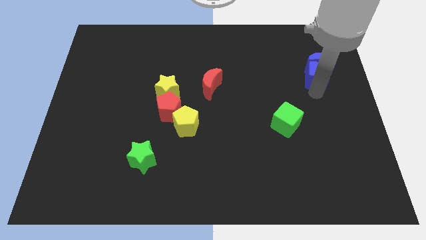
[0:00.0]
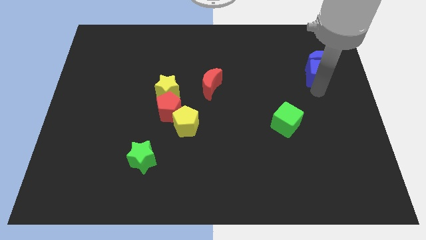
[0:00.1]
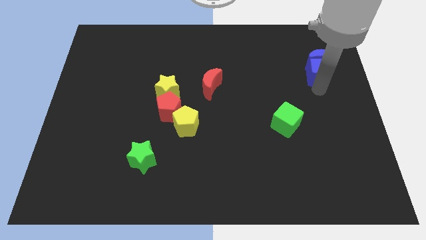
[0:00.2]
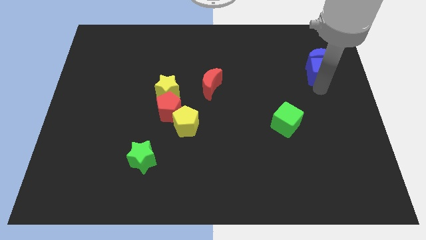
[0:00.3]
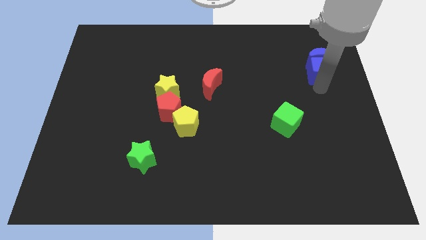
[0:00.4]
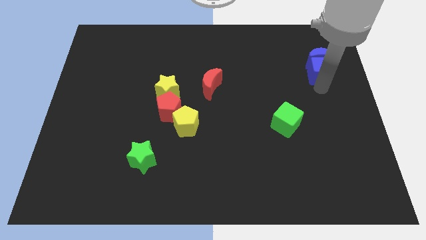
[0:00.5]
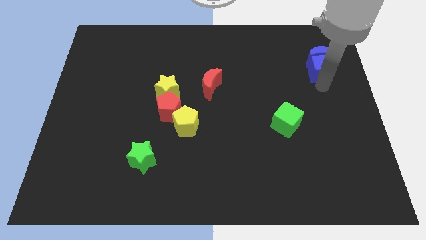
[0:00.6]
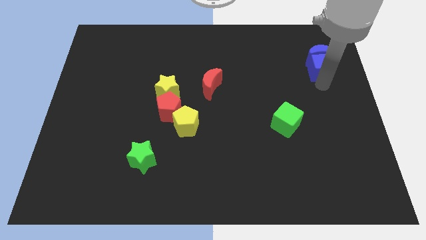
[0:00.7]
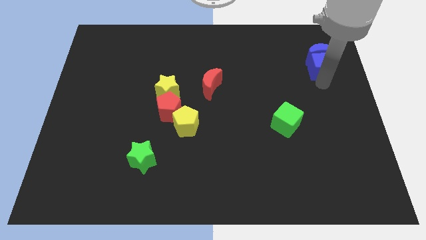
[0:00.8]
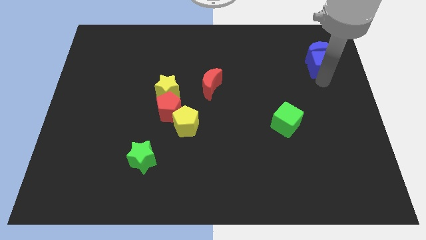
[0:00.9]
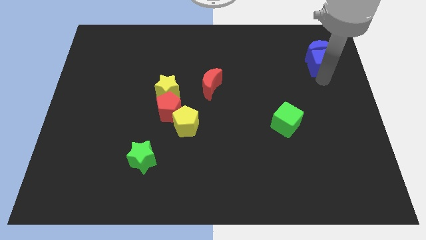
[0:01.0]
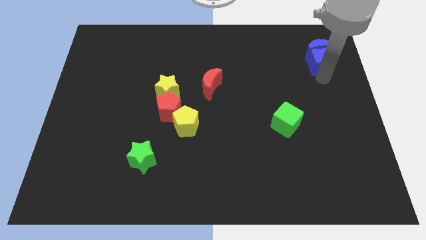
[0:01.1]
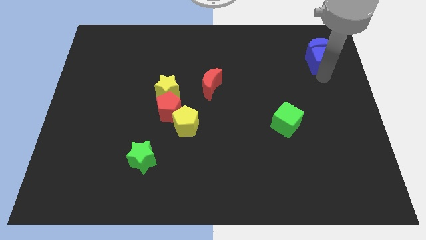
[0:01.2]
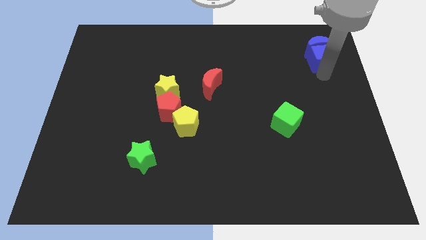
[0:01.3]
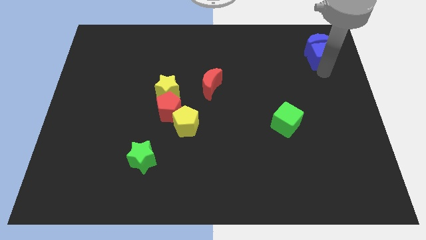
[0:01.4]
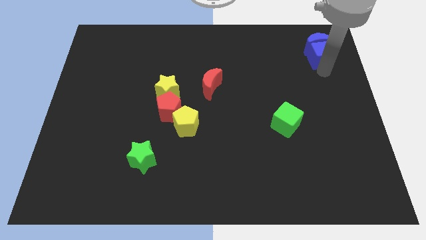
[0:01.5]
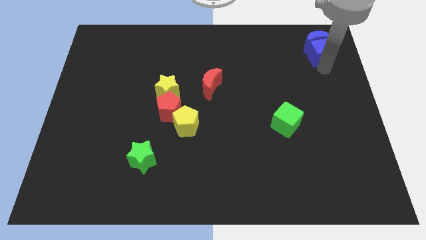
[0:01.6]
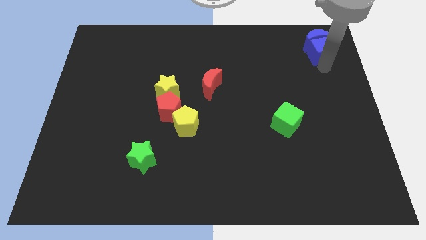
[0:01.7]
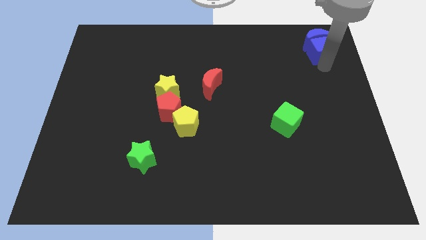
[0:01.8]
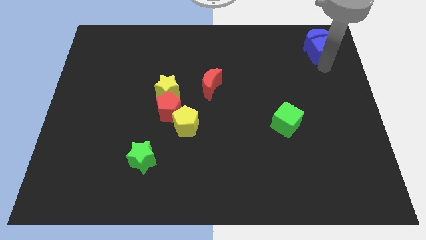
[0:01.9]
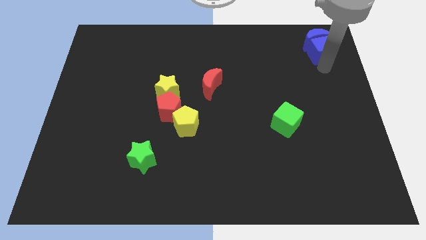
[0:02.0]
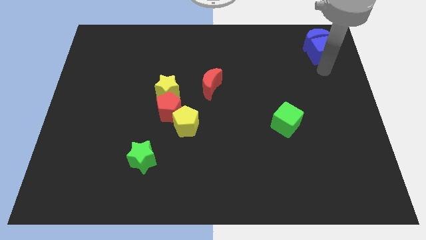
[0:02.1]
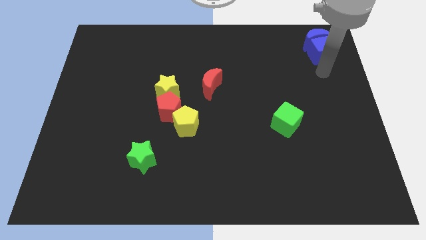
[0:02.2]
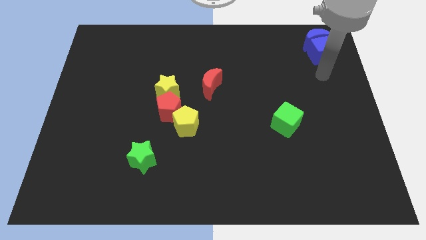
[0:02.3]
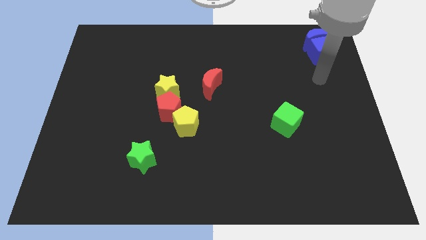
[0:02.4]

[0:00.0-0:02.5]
push the blue blocks together to the top right corner of the board

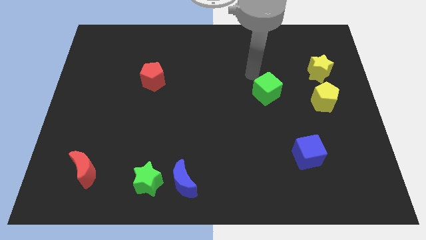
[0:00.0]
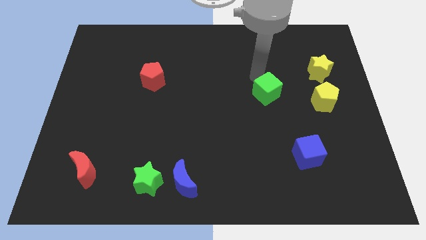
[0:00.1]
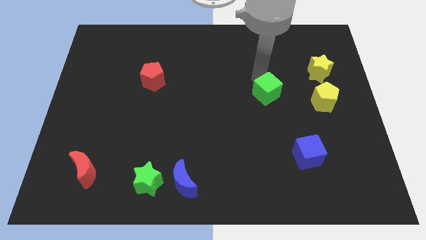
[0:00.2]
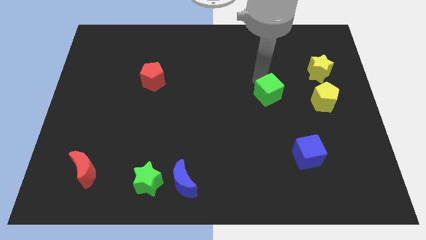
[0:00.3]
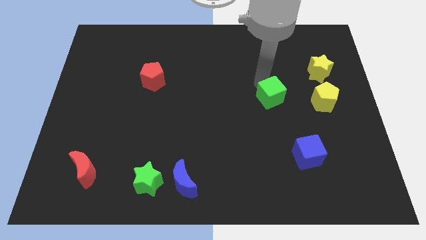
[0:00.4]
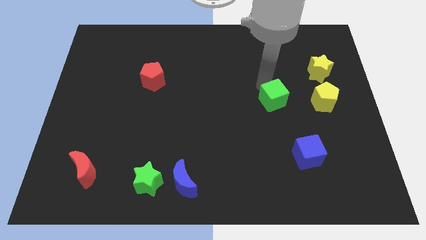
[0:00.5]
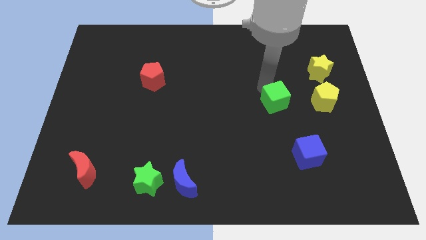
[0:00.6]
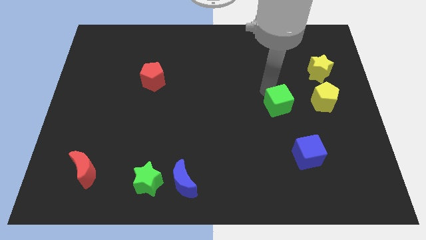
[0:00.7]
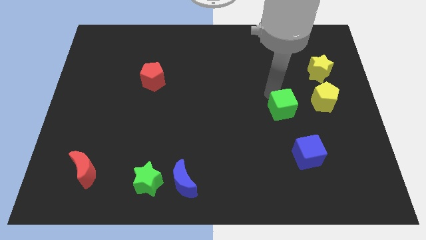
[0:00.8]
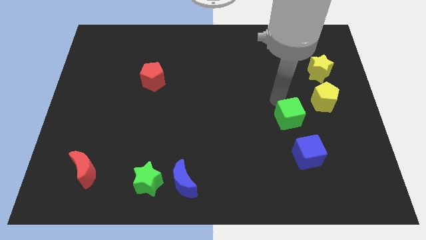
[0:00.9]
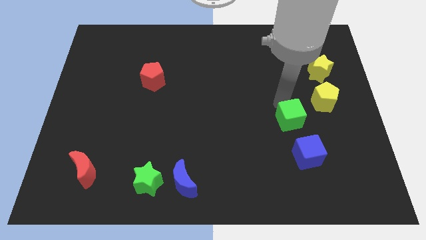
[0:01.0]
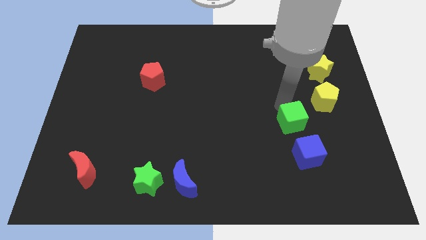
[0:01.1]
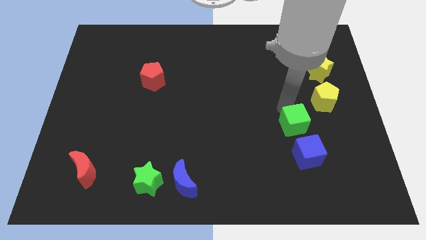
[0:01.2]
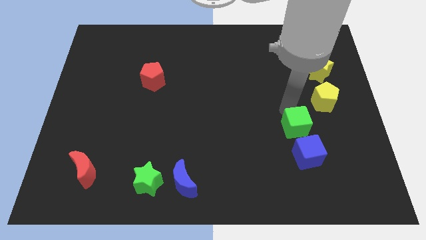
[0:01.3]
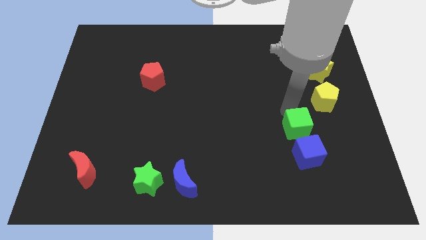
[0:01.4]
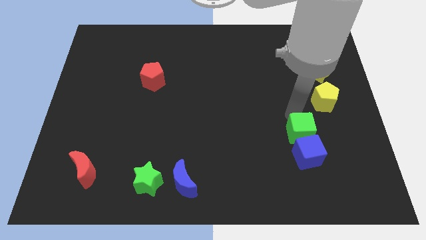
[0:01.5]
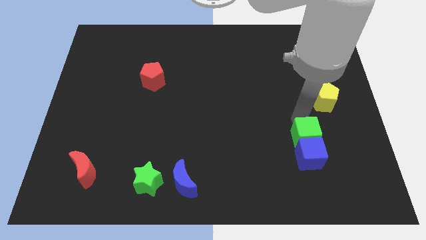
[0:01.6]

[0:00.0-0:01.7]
place the green cube to the top of blue cube

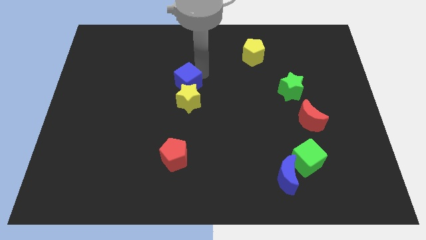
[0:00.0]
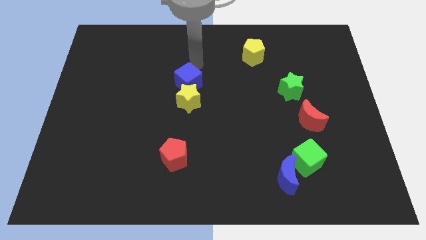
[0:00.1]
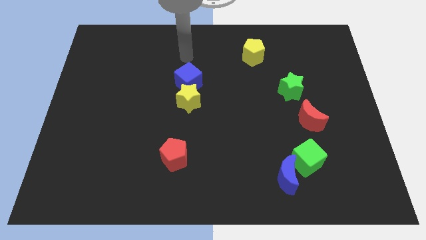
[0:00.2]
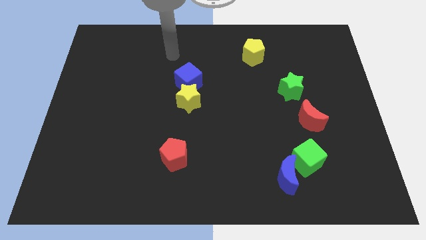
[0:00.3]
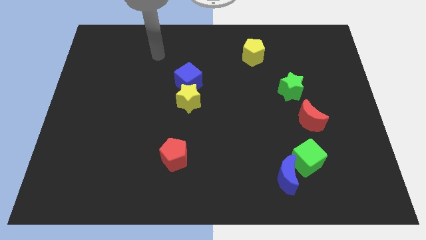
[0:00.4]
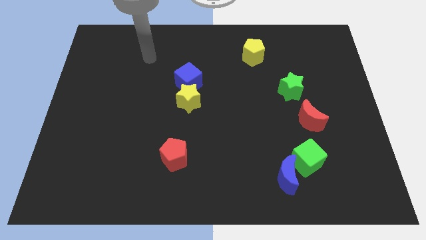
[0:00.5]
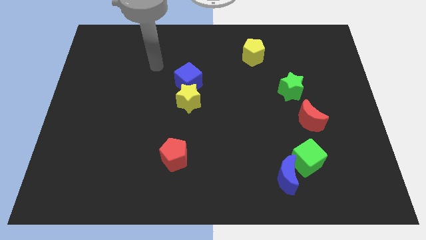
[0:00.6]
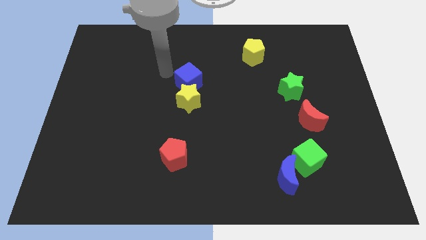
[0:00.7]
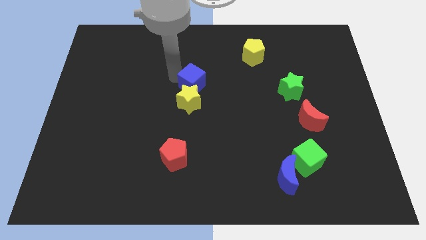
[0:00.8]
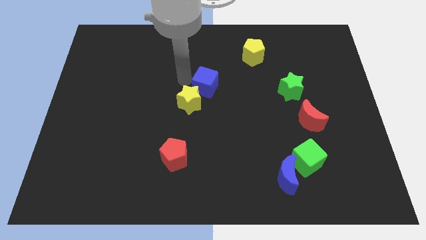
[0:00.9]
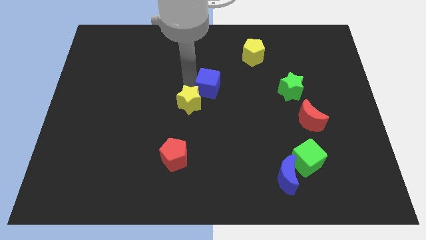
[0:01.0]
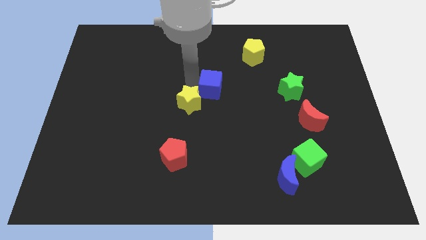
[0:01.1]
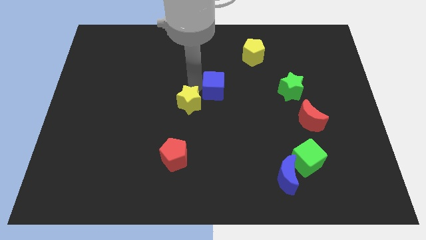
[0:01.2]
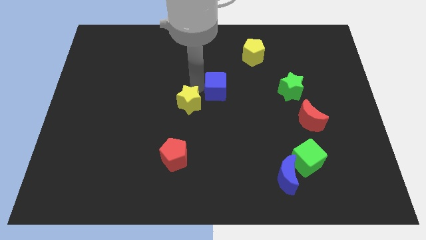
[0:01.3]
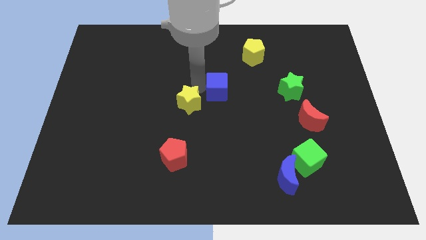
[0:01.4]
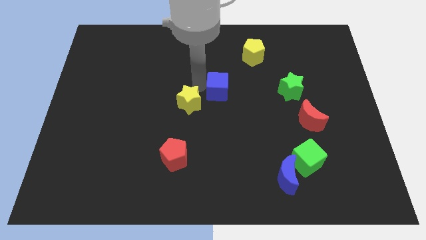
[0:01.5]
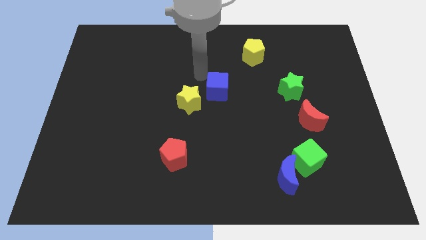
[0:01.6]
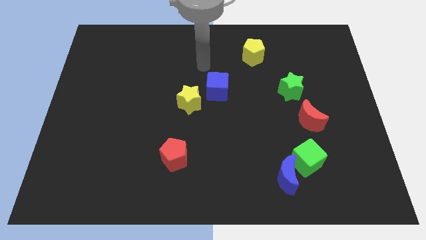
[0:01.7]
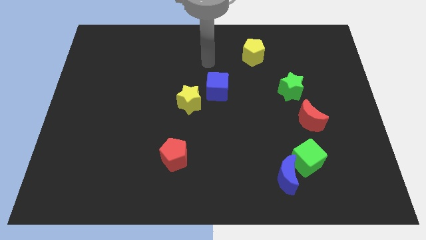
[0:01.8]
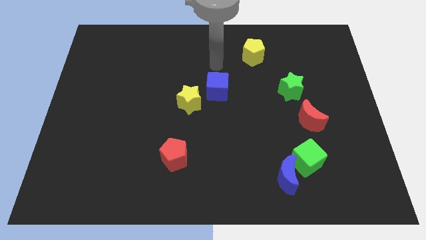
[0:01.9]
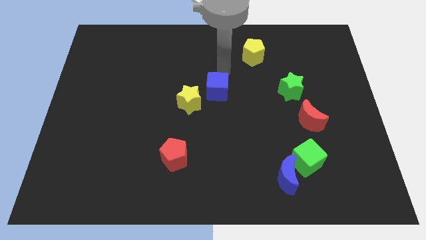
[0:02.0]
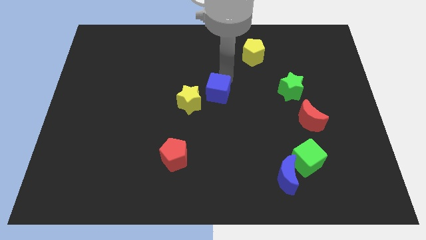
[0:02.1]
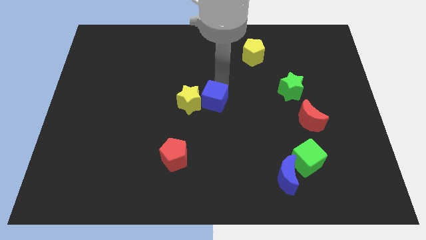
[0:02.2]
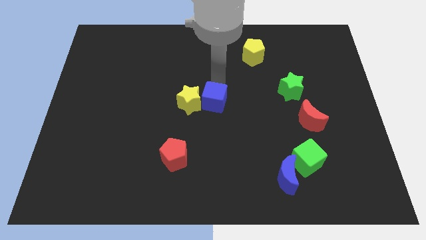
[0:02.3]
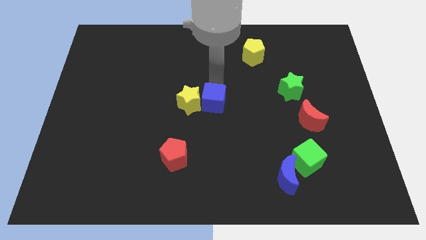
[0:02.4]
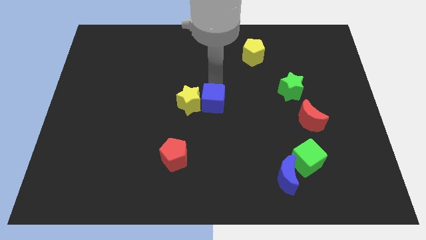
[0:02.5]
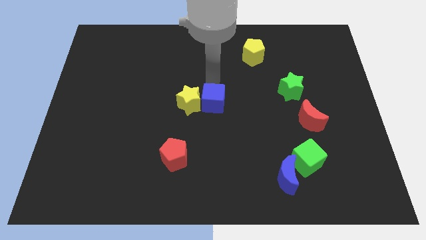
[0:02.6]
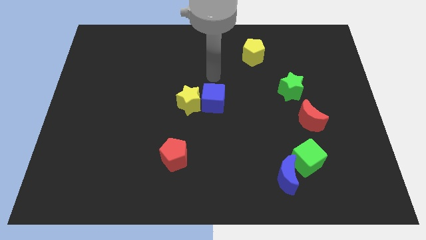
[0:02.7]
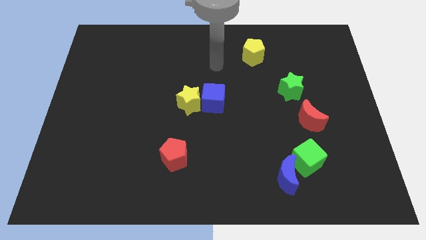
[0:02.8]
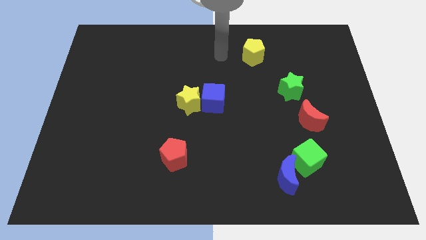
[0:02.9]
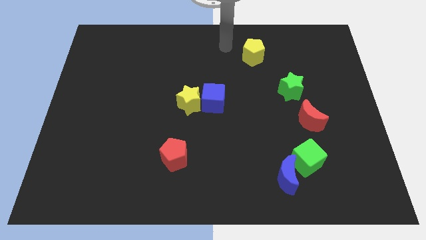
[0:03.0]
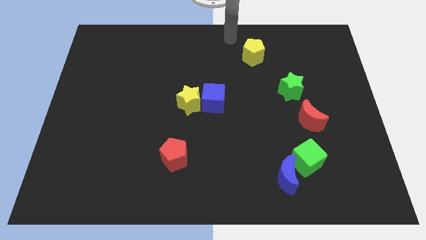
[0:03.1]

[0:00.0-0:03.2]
put the blue cube at the center of the board

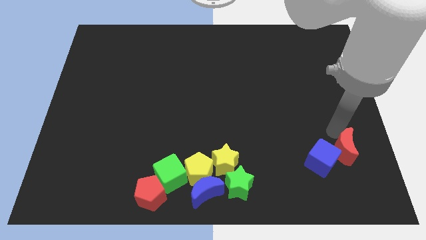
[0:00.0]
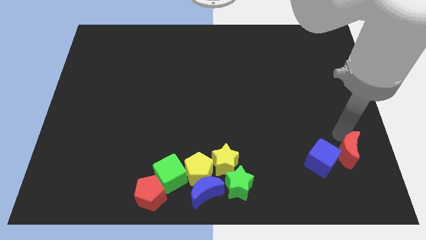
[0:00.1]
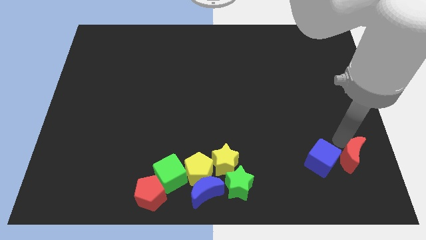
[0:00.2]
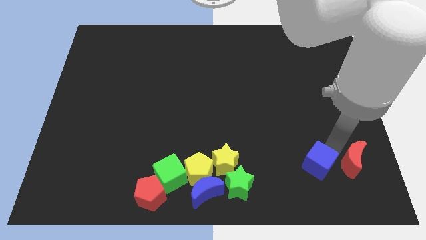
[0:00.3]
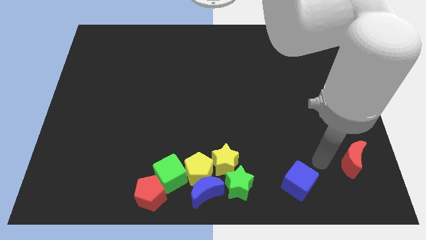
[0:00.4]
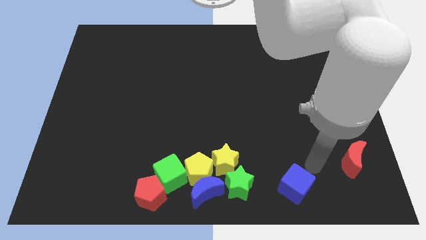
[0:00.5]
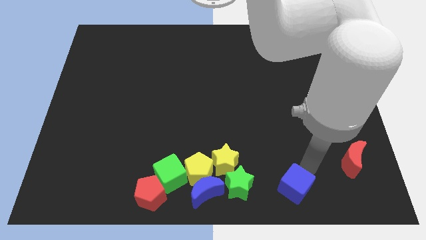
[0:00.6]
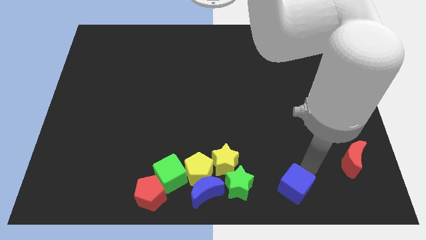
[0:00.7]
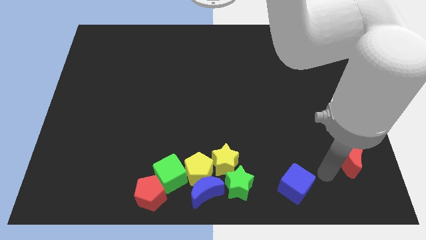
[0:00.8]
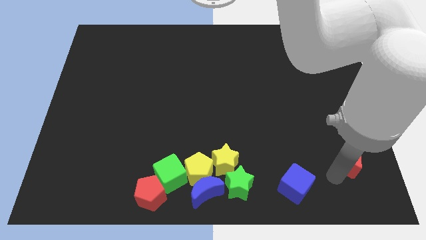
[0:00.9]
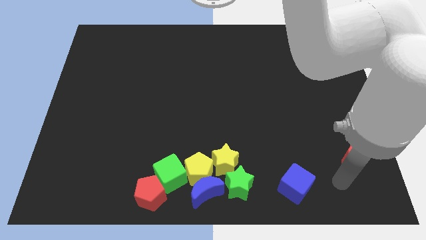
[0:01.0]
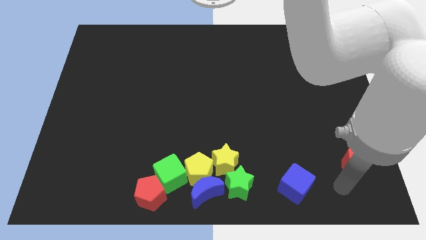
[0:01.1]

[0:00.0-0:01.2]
separate the blue cube from the red crescent

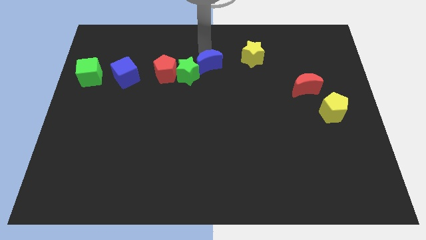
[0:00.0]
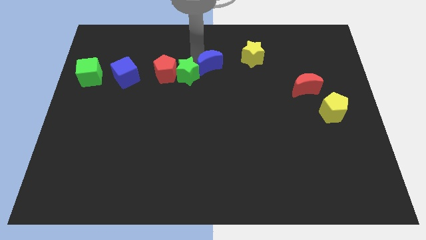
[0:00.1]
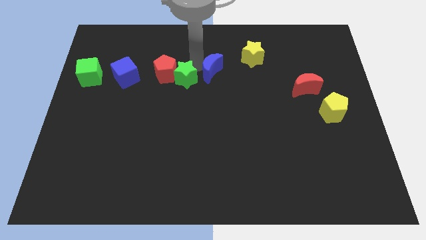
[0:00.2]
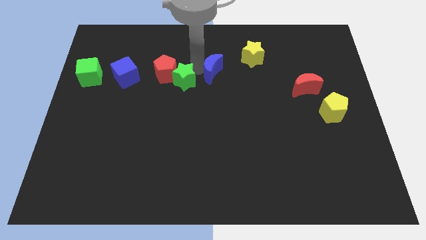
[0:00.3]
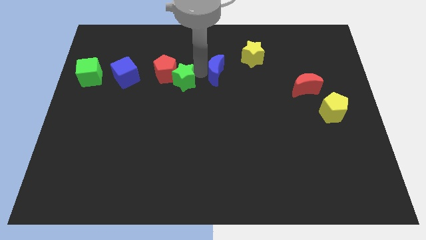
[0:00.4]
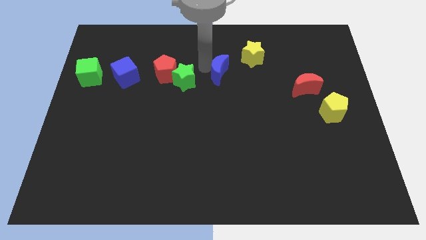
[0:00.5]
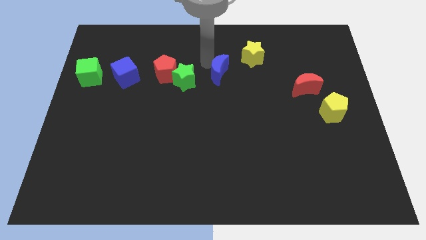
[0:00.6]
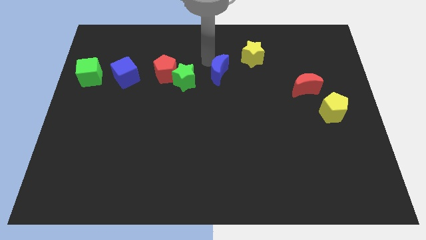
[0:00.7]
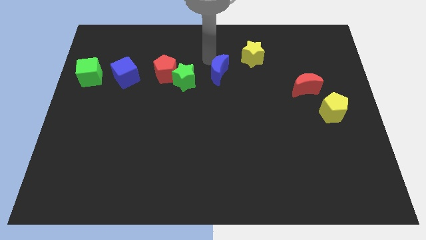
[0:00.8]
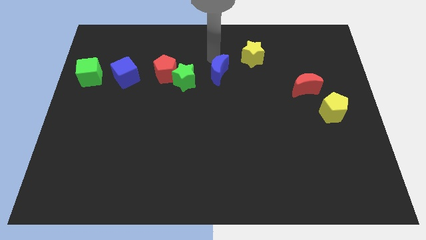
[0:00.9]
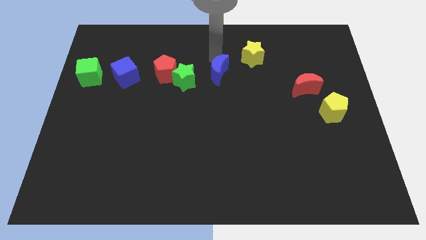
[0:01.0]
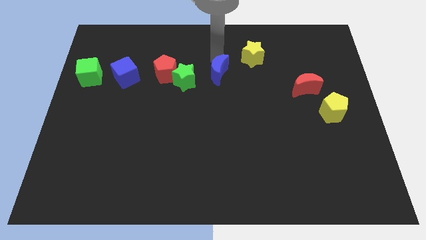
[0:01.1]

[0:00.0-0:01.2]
separate the green star and the blue moon
